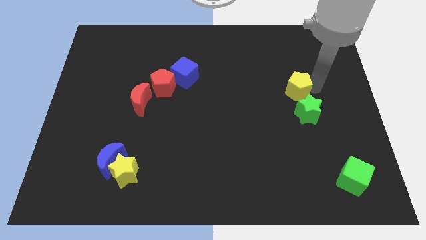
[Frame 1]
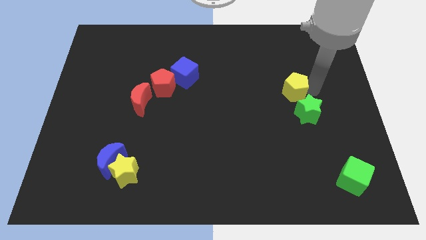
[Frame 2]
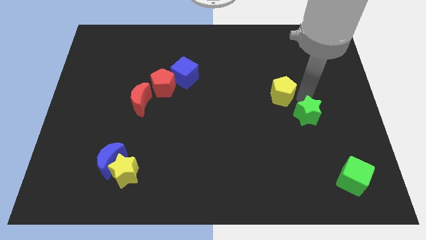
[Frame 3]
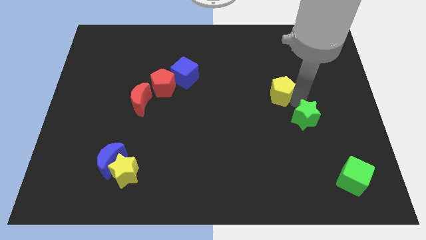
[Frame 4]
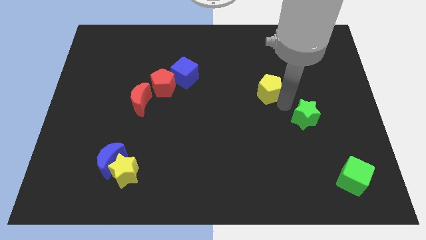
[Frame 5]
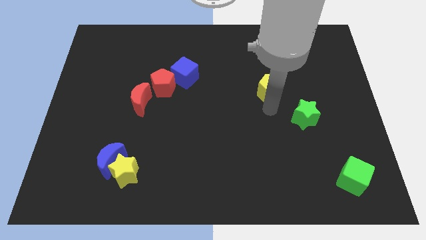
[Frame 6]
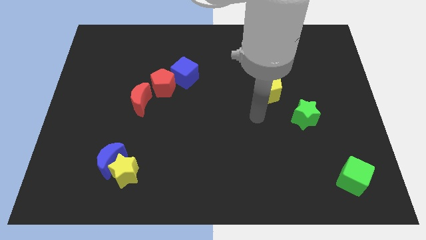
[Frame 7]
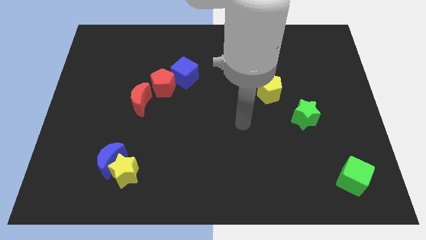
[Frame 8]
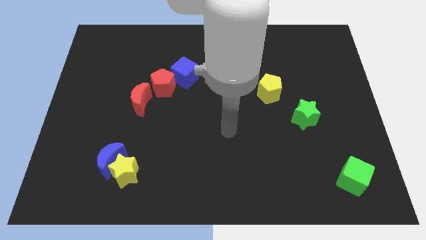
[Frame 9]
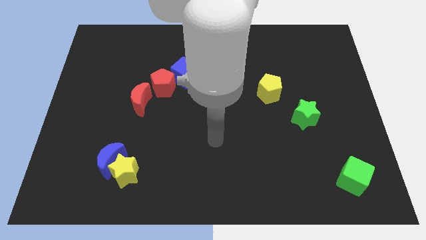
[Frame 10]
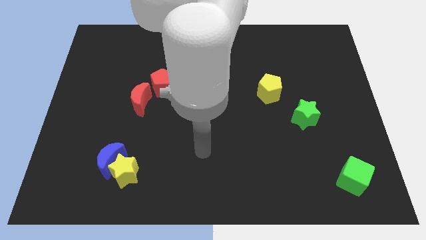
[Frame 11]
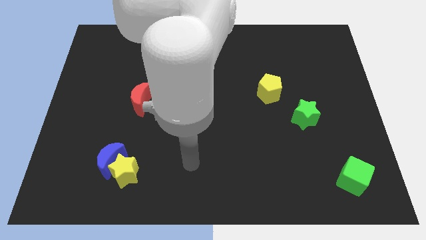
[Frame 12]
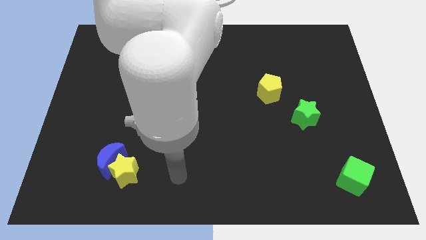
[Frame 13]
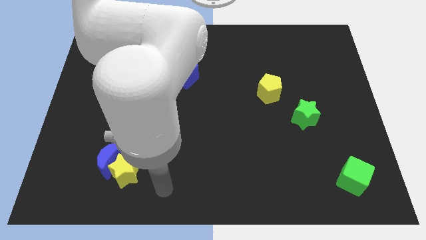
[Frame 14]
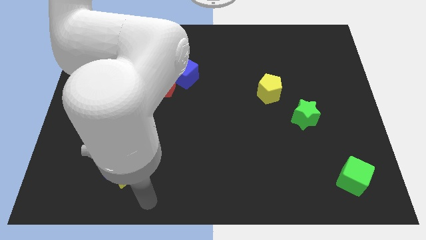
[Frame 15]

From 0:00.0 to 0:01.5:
separate the yellow pentagon and green star

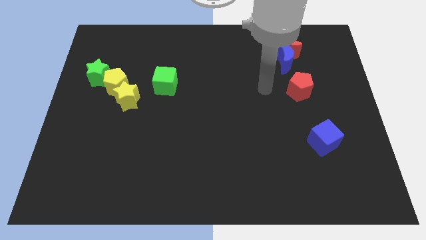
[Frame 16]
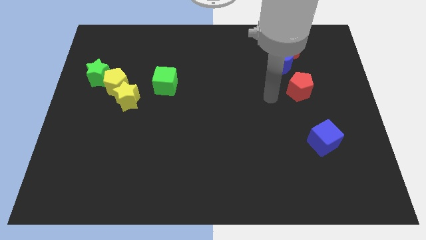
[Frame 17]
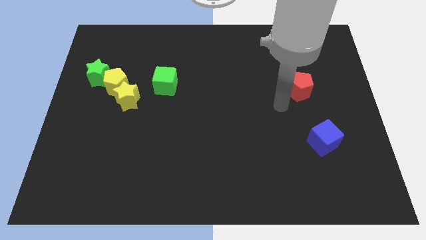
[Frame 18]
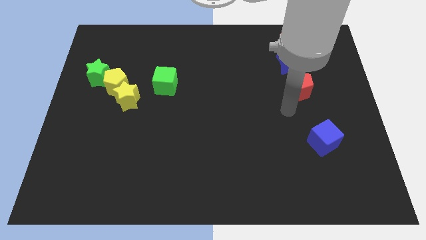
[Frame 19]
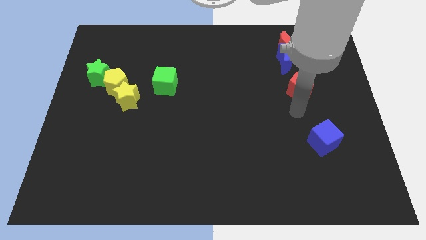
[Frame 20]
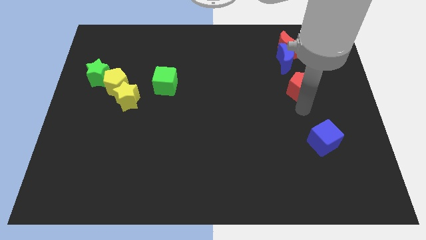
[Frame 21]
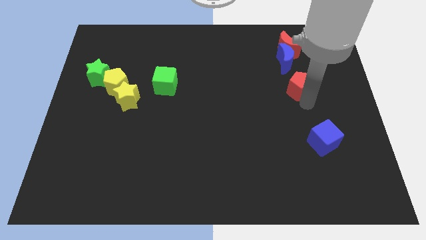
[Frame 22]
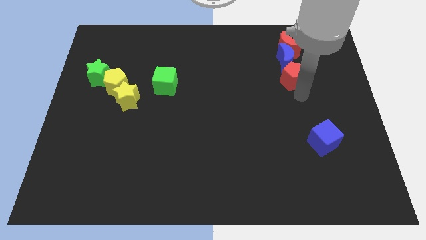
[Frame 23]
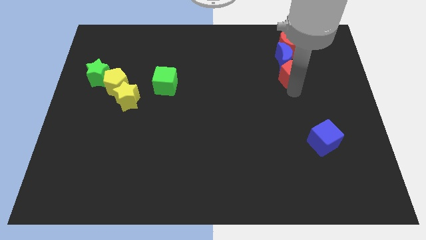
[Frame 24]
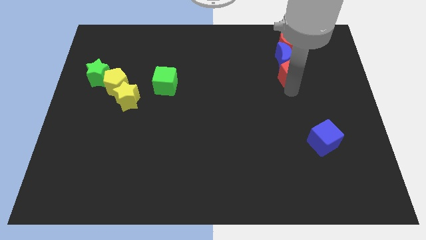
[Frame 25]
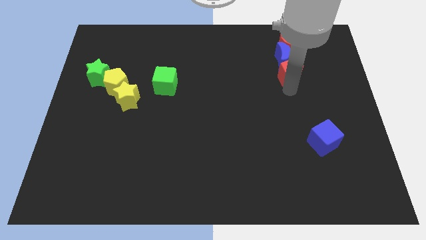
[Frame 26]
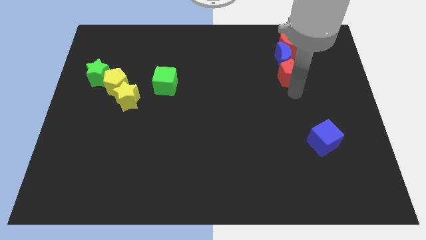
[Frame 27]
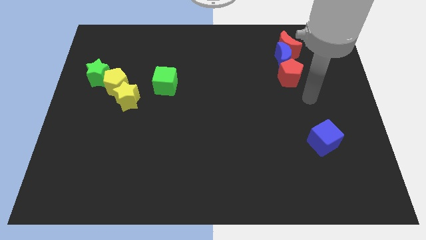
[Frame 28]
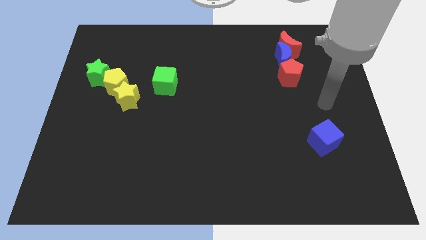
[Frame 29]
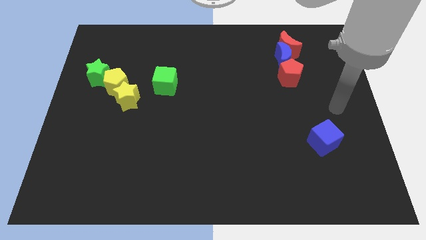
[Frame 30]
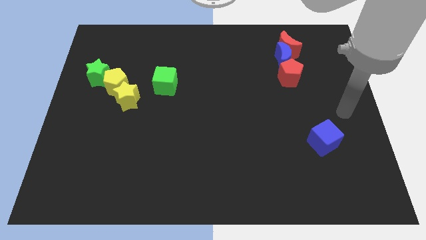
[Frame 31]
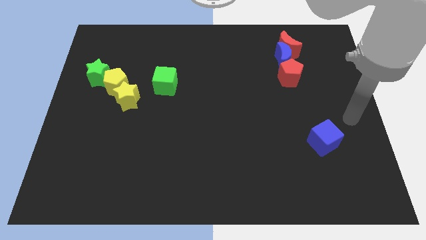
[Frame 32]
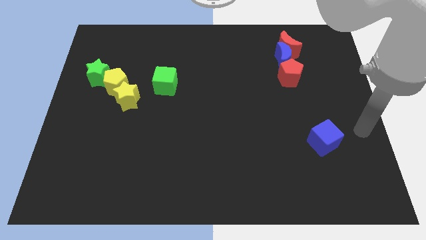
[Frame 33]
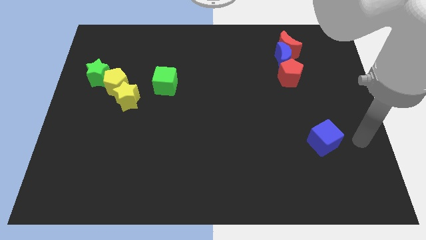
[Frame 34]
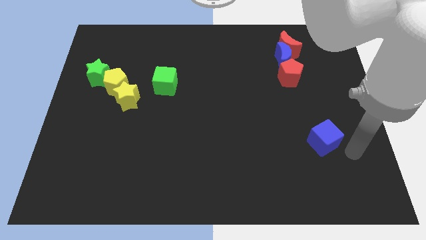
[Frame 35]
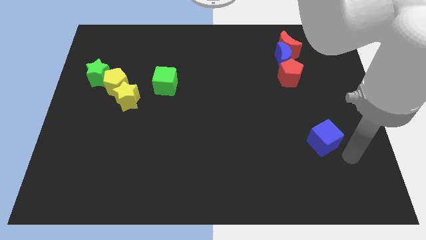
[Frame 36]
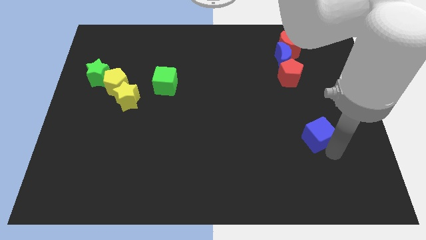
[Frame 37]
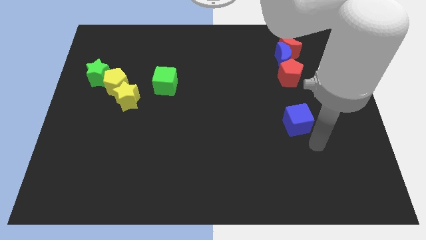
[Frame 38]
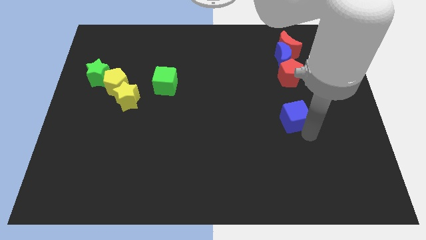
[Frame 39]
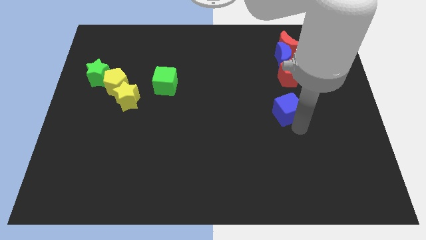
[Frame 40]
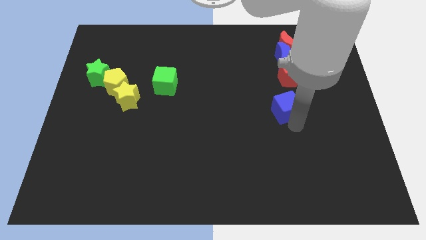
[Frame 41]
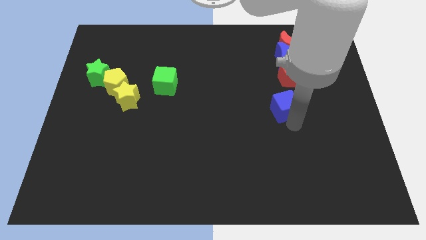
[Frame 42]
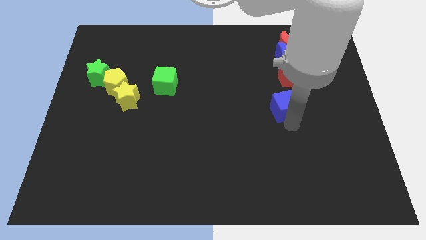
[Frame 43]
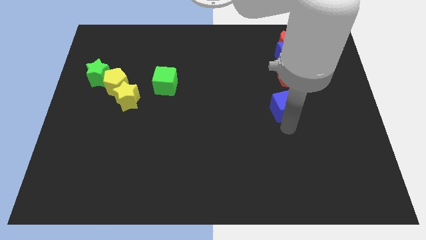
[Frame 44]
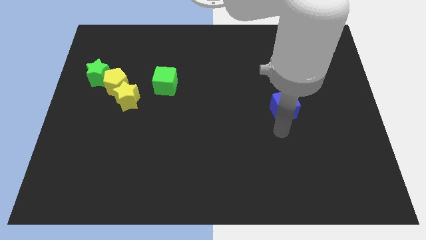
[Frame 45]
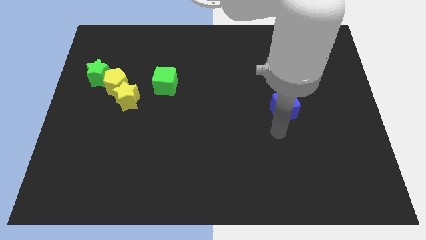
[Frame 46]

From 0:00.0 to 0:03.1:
push the red pentagon into the blue moon

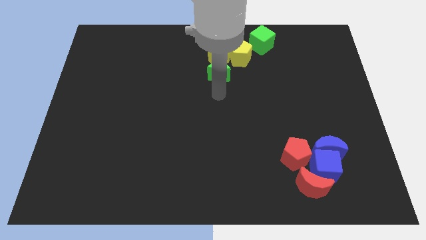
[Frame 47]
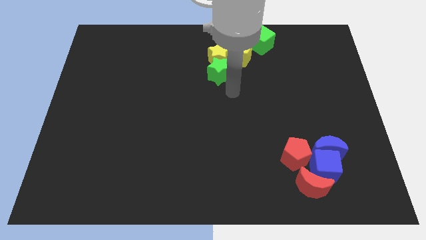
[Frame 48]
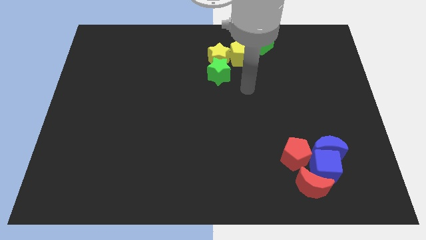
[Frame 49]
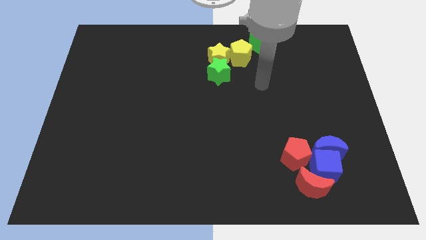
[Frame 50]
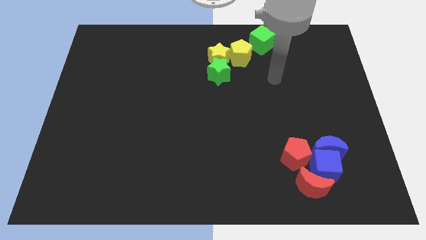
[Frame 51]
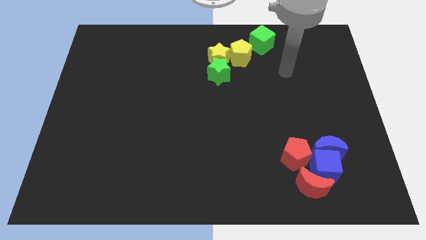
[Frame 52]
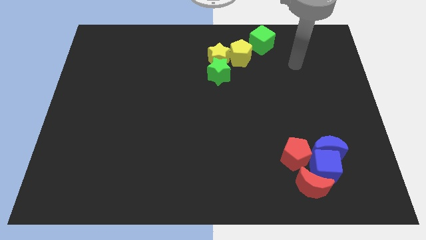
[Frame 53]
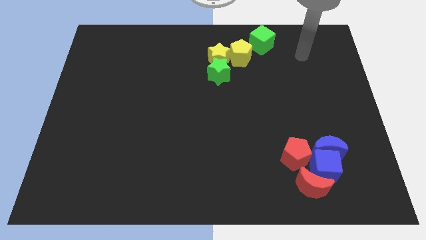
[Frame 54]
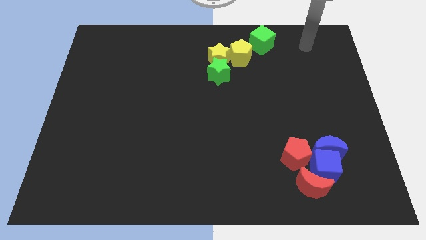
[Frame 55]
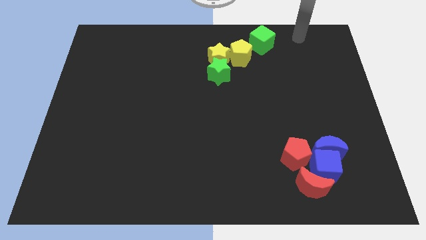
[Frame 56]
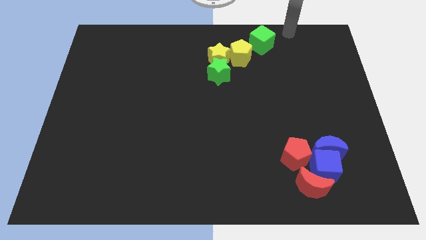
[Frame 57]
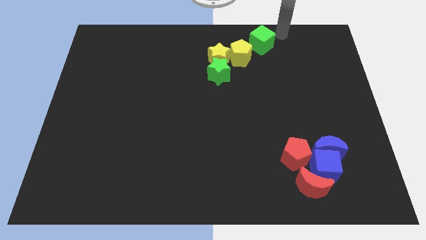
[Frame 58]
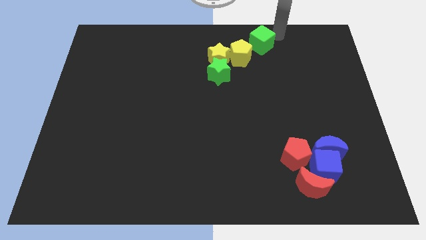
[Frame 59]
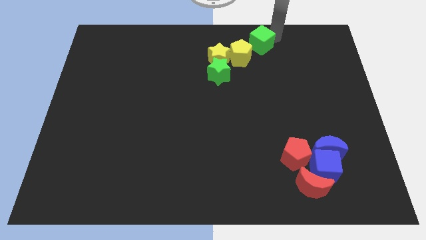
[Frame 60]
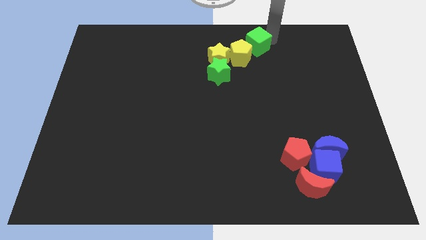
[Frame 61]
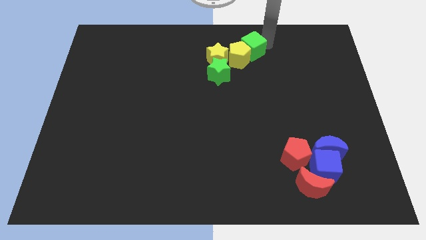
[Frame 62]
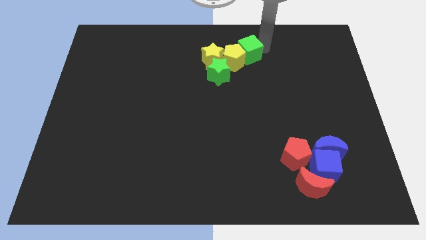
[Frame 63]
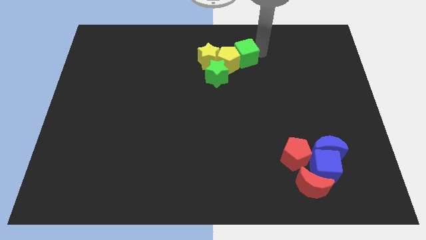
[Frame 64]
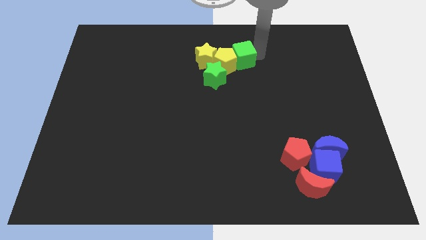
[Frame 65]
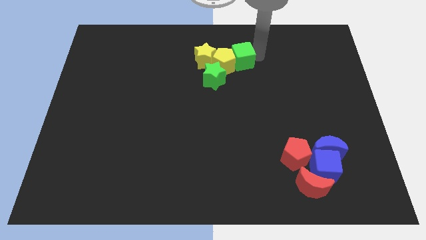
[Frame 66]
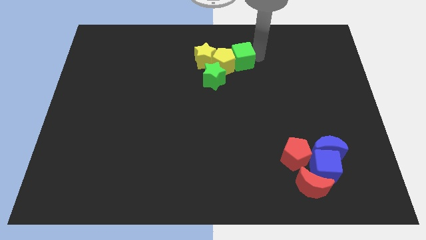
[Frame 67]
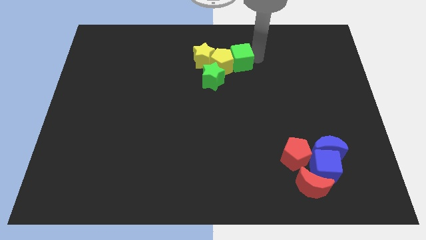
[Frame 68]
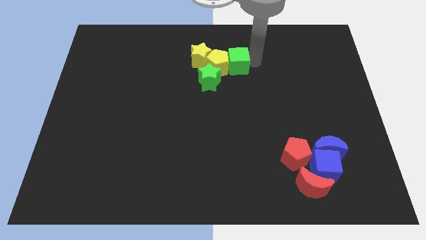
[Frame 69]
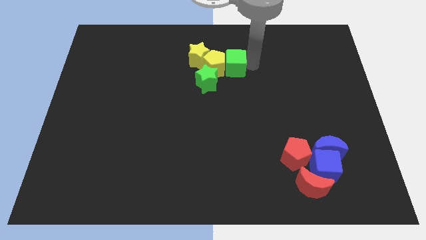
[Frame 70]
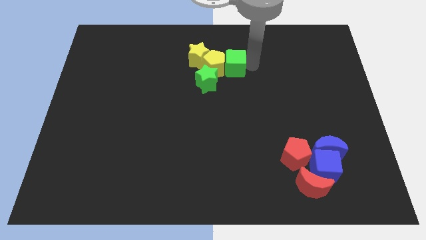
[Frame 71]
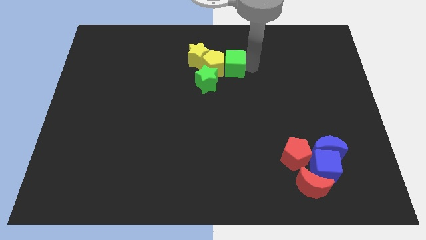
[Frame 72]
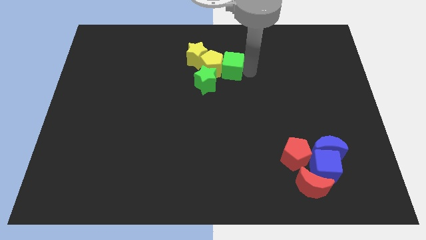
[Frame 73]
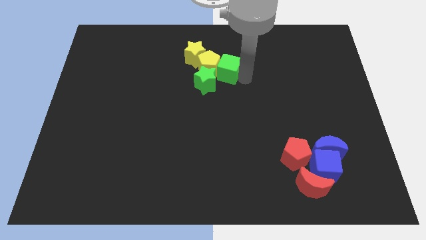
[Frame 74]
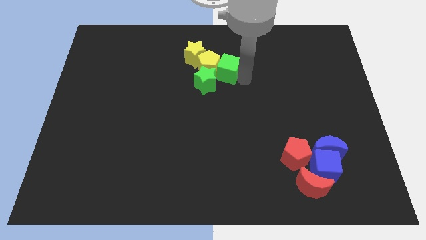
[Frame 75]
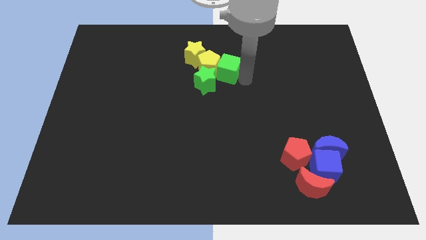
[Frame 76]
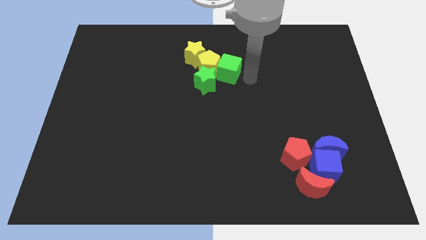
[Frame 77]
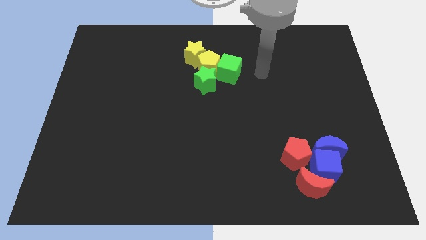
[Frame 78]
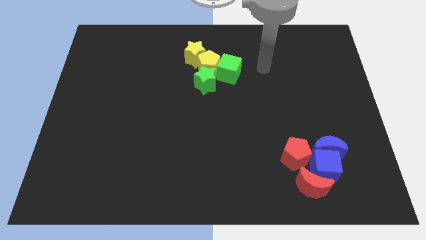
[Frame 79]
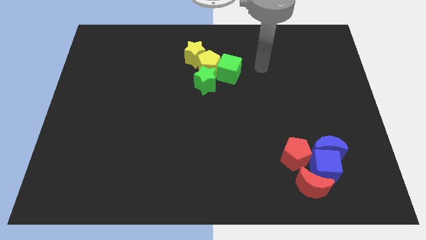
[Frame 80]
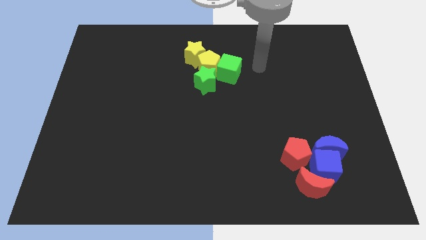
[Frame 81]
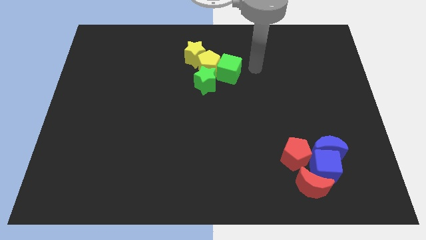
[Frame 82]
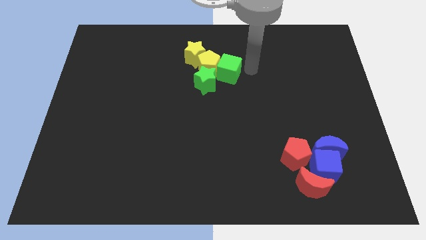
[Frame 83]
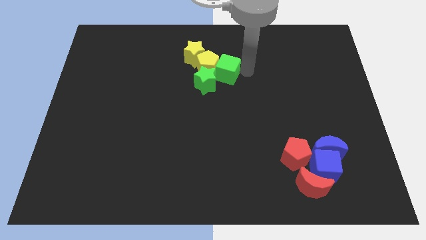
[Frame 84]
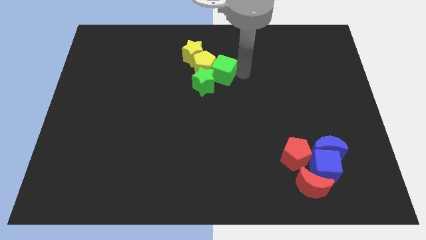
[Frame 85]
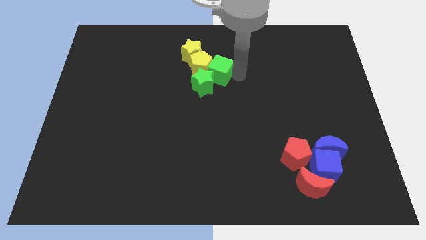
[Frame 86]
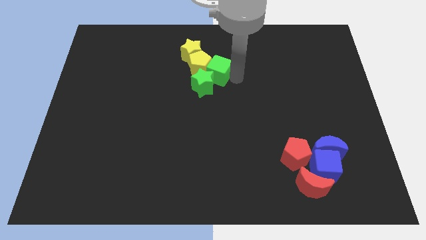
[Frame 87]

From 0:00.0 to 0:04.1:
push the green cube into the group of blocks

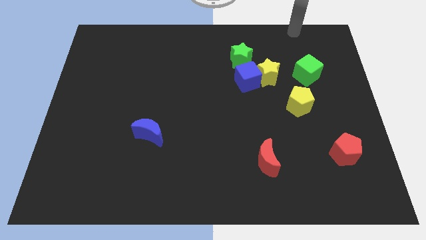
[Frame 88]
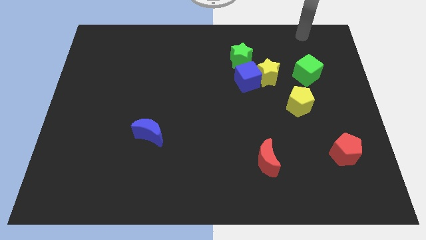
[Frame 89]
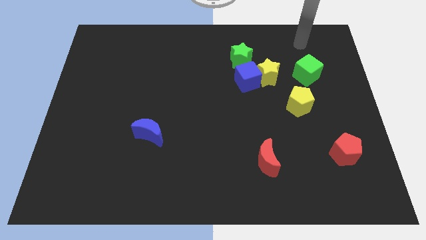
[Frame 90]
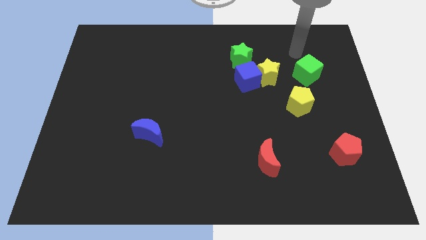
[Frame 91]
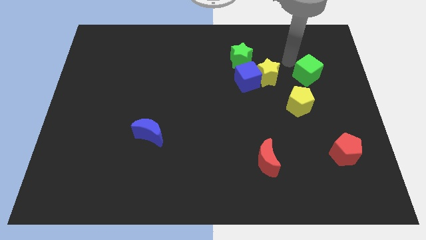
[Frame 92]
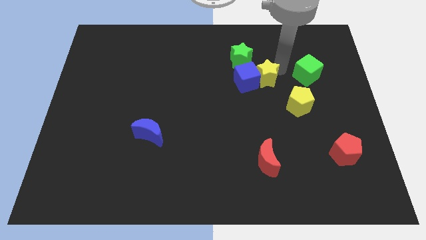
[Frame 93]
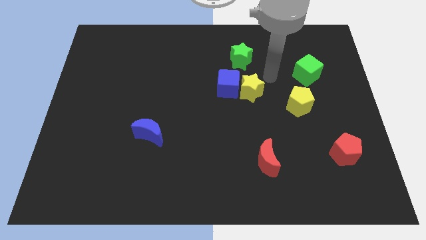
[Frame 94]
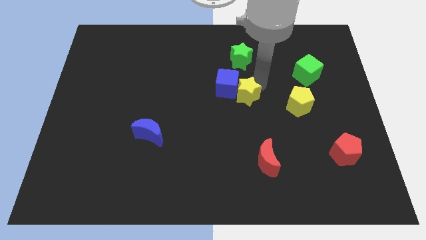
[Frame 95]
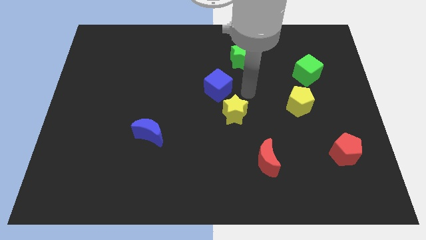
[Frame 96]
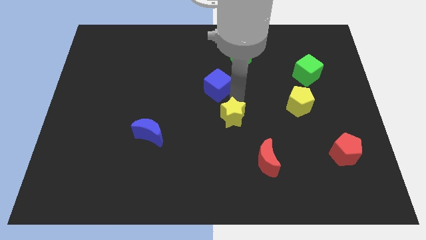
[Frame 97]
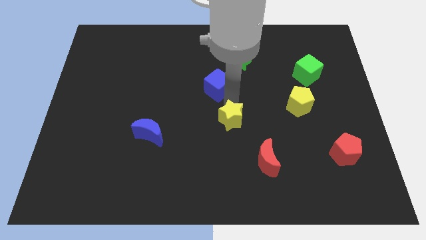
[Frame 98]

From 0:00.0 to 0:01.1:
separate blue cube and yellow star from each other
